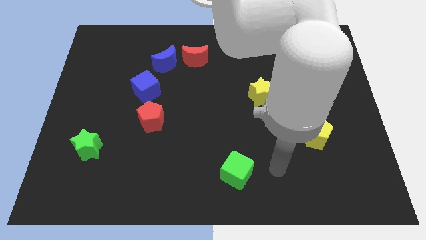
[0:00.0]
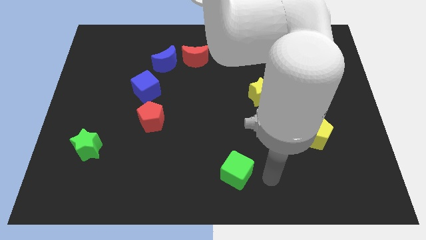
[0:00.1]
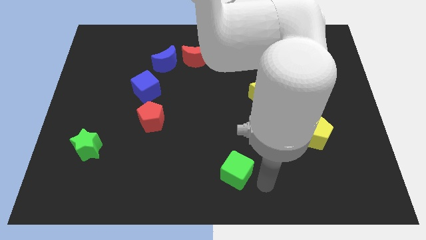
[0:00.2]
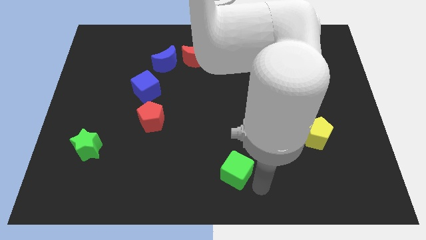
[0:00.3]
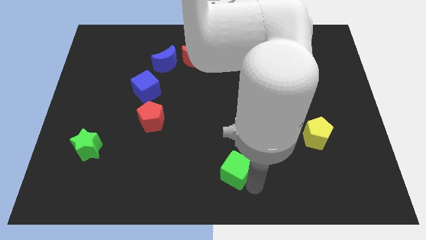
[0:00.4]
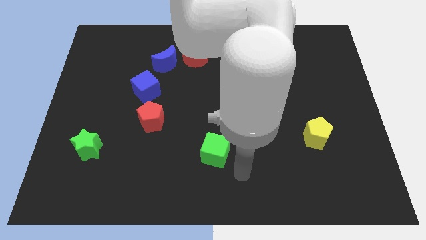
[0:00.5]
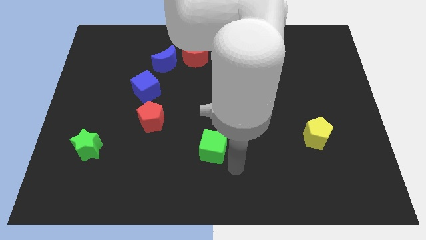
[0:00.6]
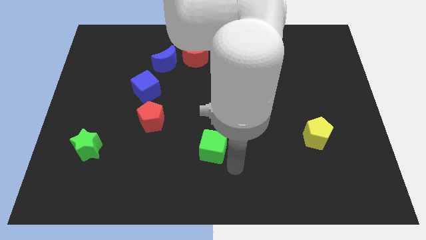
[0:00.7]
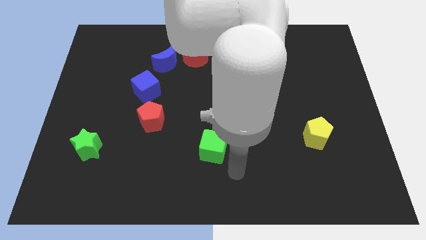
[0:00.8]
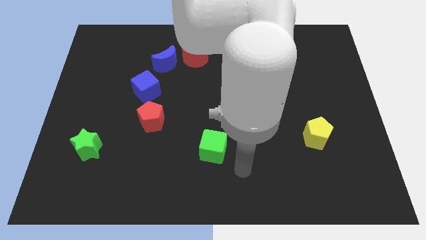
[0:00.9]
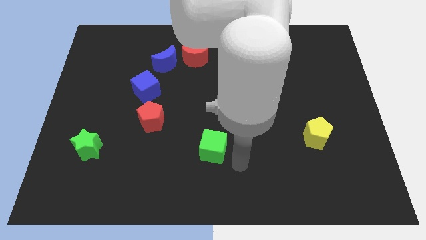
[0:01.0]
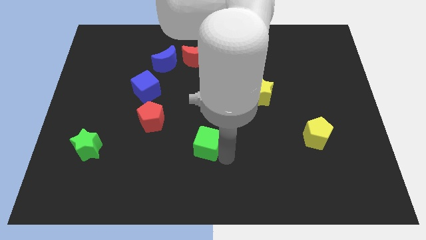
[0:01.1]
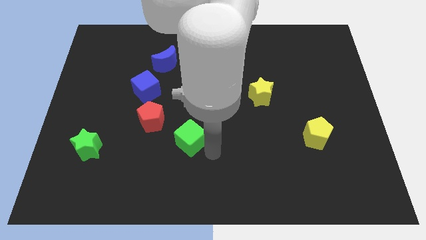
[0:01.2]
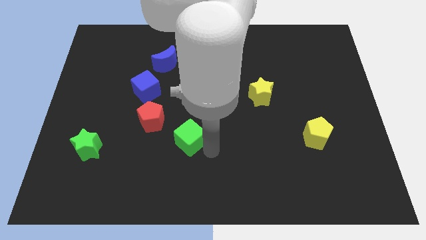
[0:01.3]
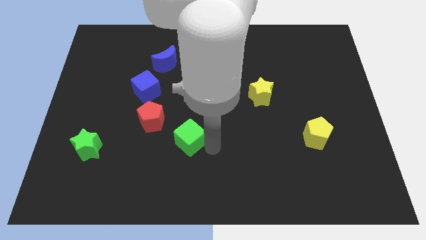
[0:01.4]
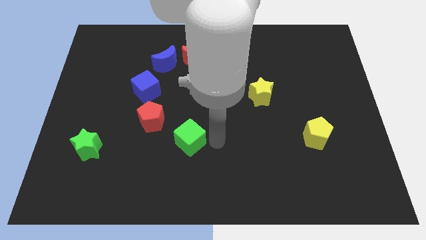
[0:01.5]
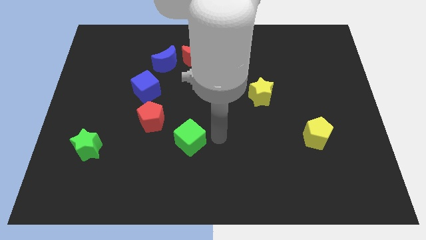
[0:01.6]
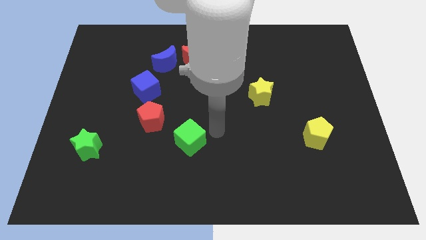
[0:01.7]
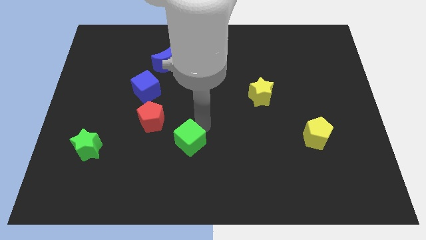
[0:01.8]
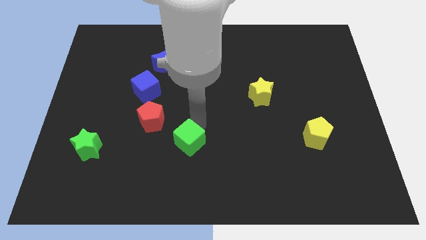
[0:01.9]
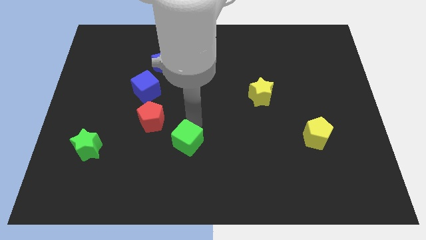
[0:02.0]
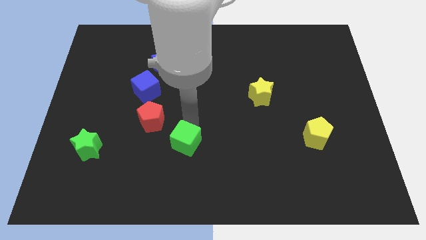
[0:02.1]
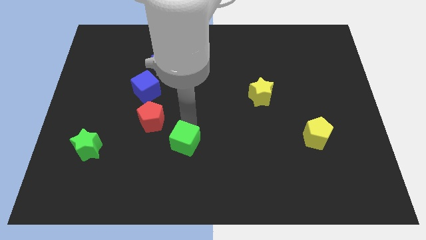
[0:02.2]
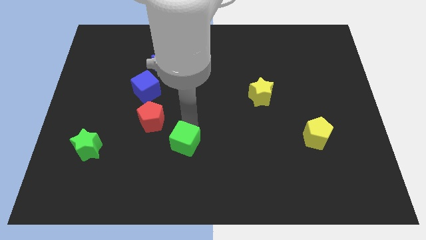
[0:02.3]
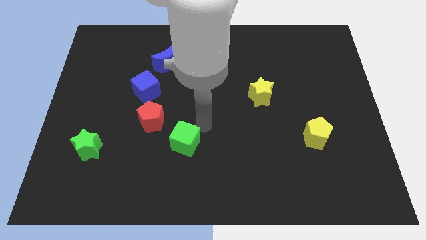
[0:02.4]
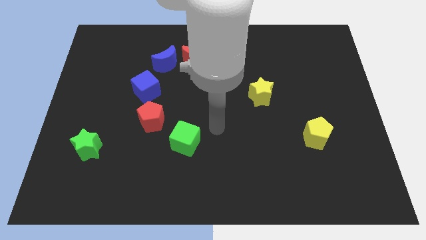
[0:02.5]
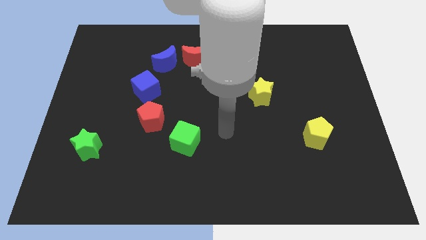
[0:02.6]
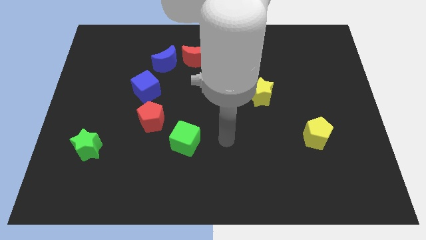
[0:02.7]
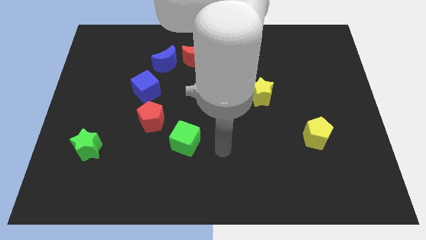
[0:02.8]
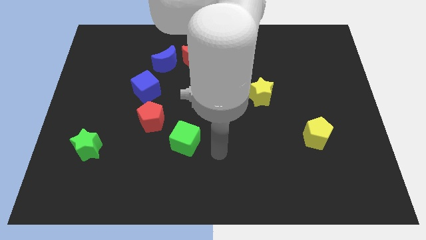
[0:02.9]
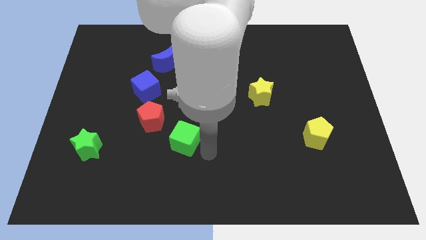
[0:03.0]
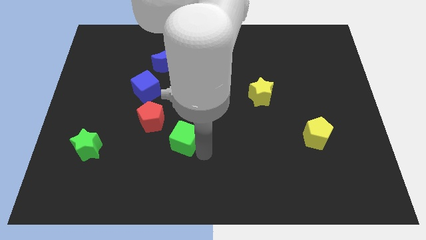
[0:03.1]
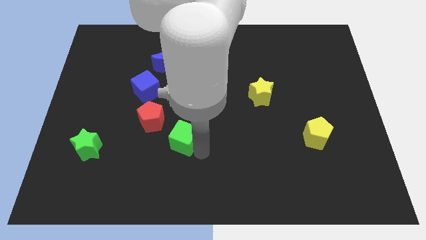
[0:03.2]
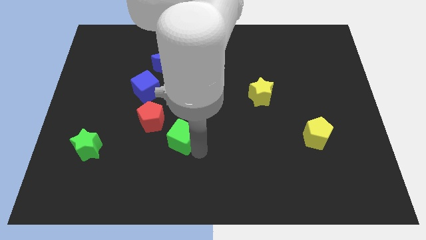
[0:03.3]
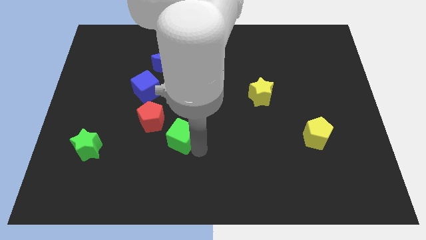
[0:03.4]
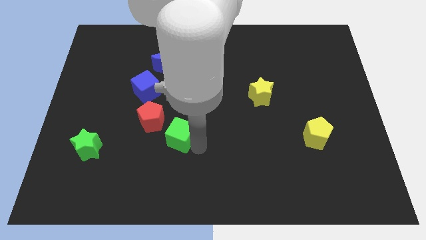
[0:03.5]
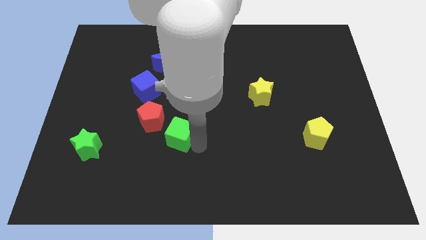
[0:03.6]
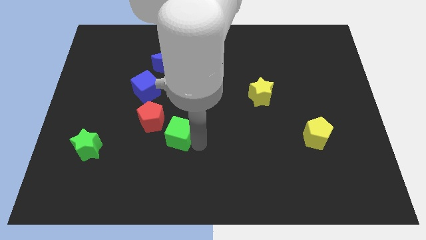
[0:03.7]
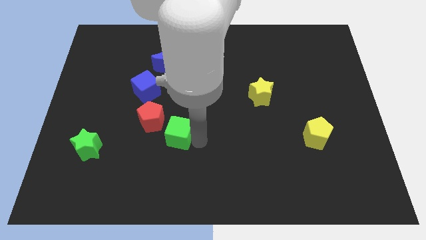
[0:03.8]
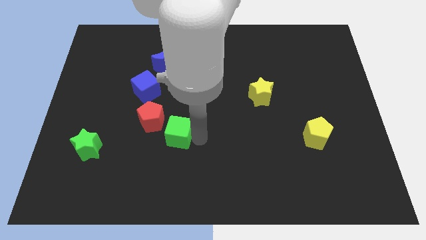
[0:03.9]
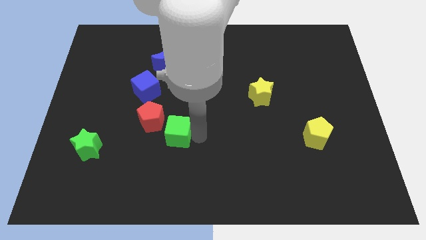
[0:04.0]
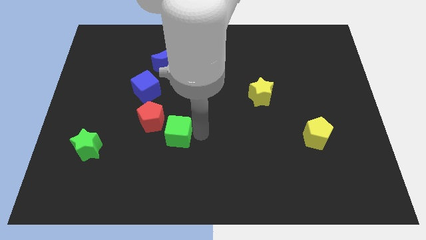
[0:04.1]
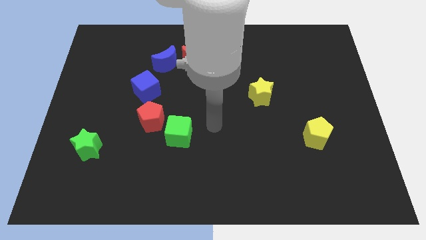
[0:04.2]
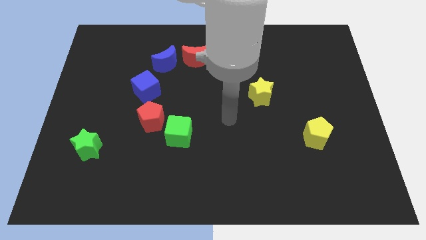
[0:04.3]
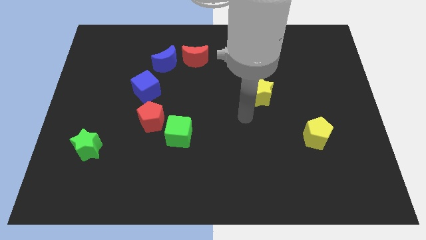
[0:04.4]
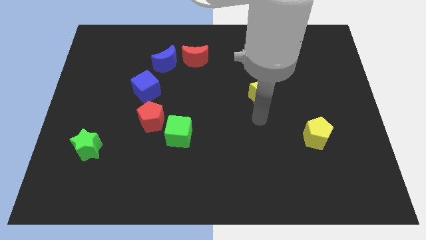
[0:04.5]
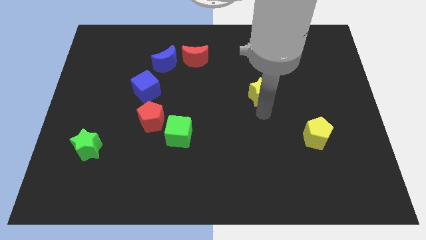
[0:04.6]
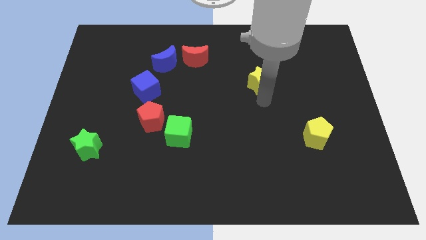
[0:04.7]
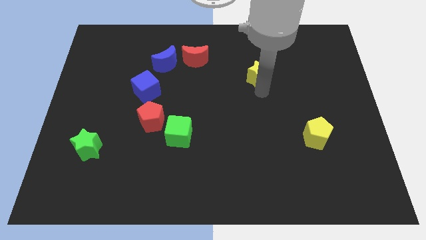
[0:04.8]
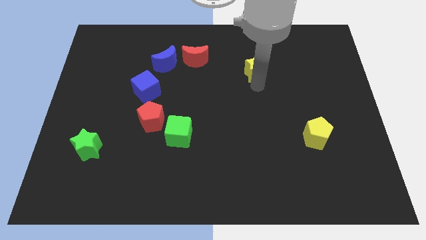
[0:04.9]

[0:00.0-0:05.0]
move the green cube close to the red pentagon

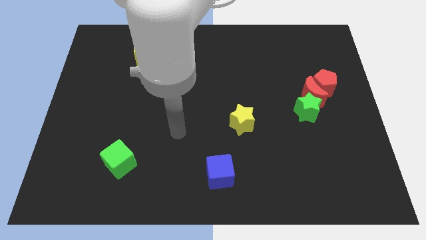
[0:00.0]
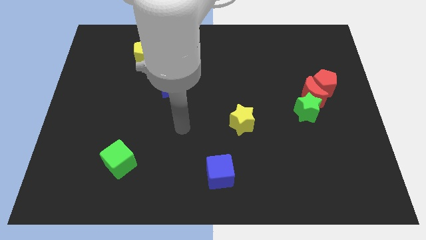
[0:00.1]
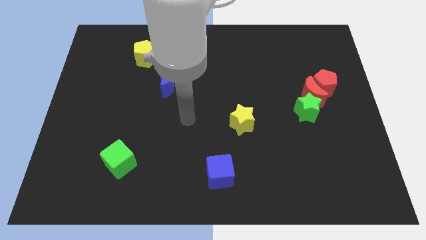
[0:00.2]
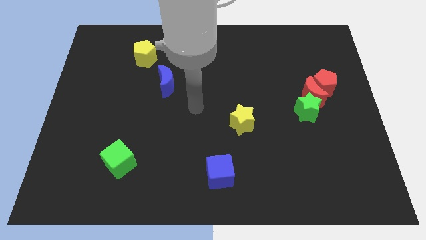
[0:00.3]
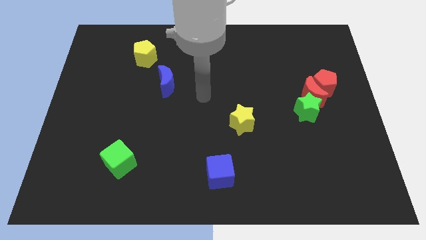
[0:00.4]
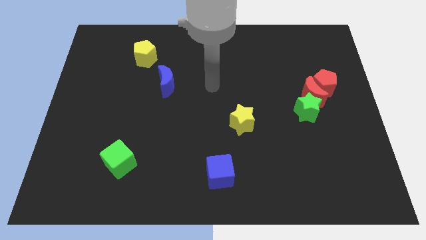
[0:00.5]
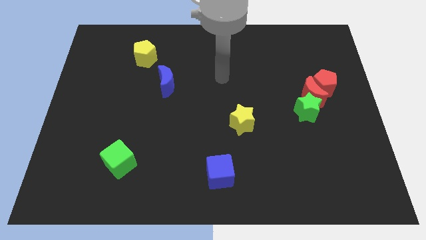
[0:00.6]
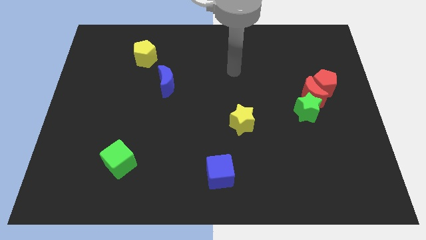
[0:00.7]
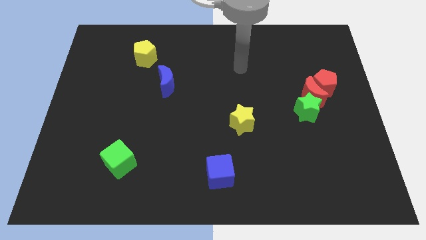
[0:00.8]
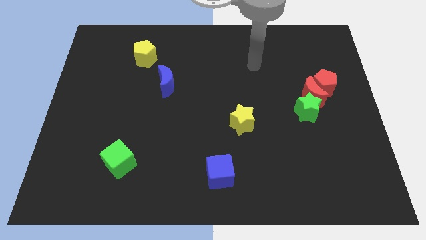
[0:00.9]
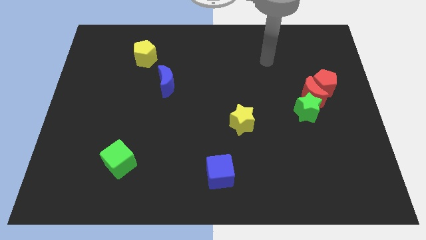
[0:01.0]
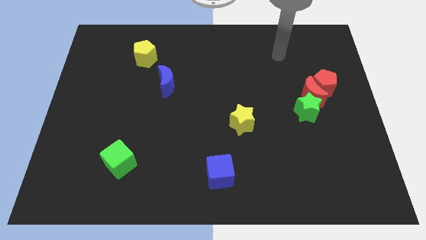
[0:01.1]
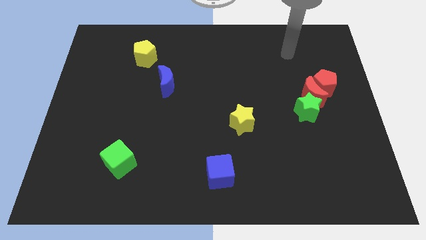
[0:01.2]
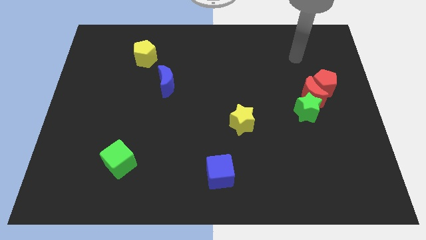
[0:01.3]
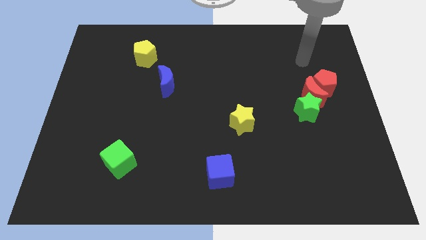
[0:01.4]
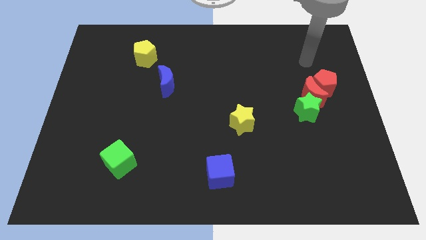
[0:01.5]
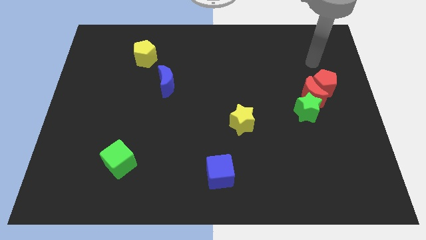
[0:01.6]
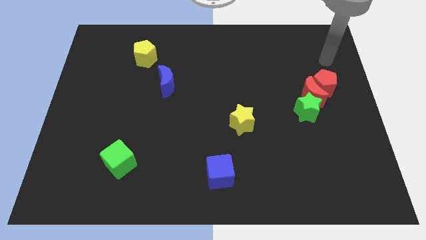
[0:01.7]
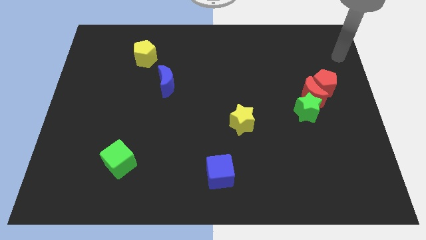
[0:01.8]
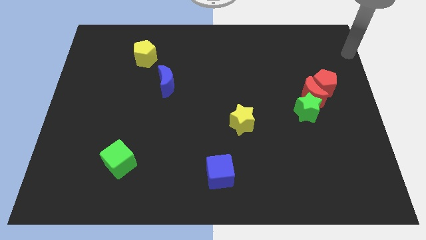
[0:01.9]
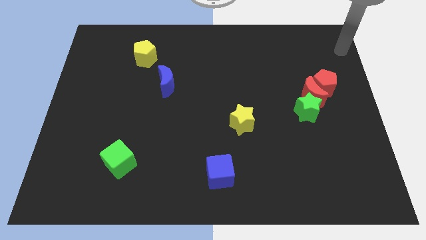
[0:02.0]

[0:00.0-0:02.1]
move the arm towards the red pentagon

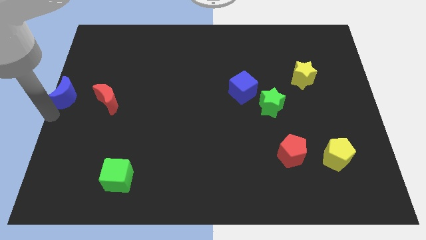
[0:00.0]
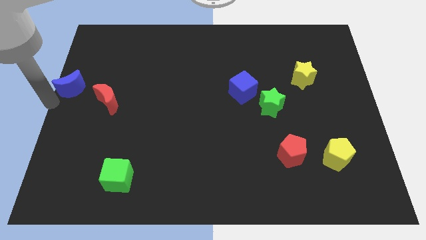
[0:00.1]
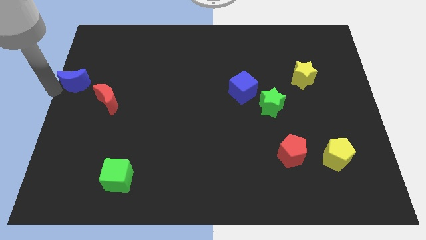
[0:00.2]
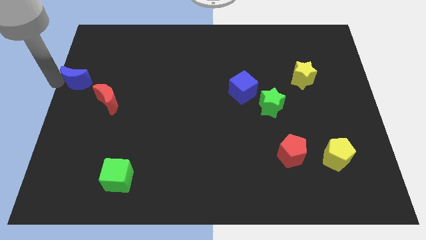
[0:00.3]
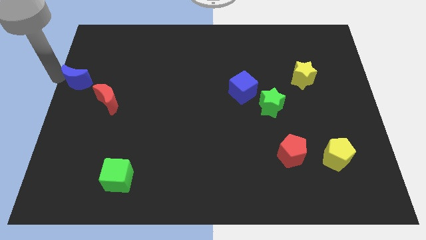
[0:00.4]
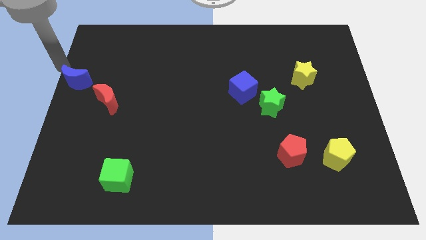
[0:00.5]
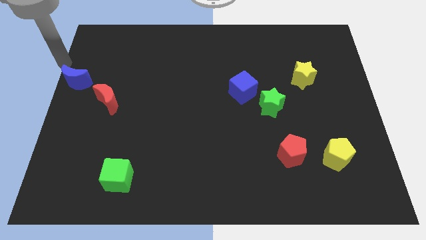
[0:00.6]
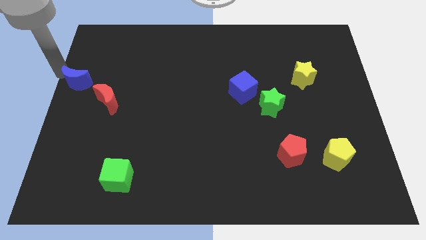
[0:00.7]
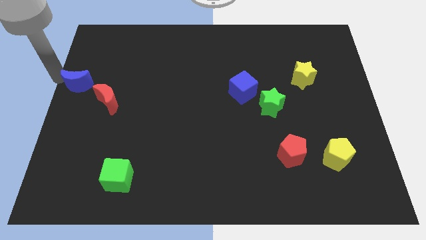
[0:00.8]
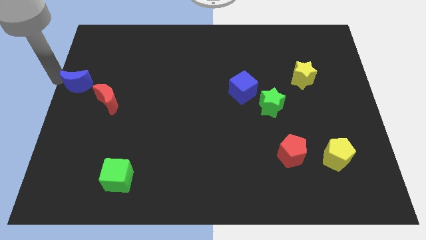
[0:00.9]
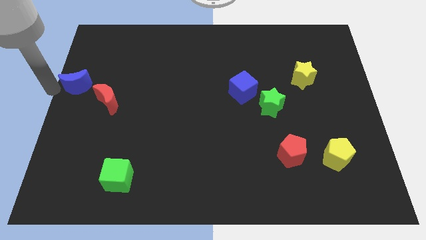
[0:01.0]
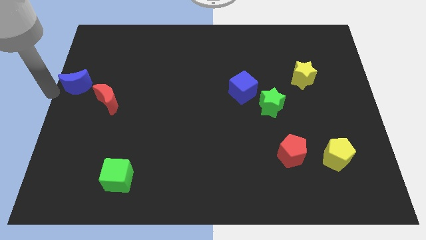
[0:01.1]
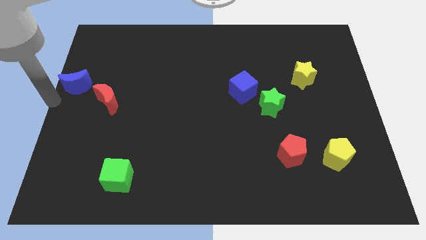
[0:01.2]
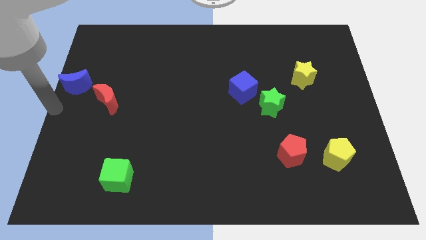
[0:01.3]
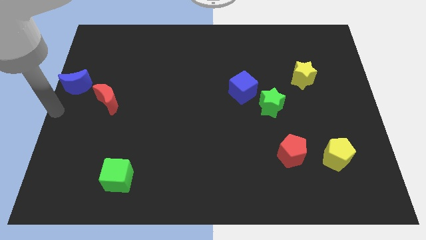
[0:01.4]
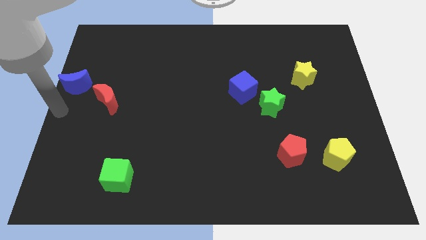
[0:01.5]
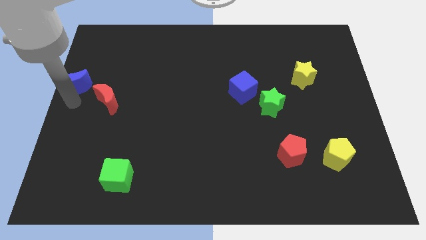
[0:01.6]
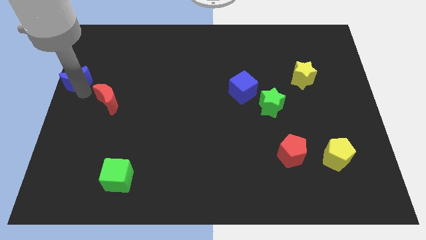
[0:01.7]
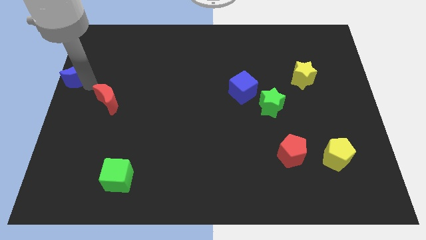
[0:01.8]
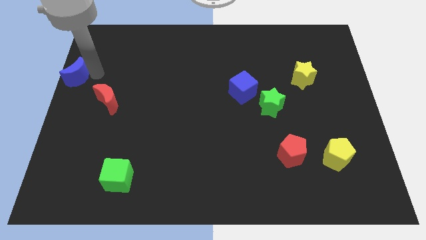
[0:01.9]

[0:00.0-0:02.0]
slide the blue moon diagonally top left to the red moon

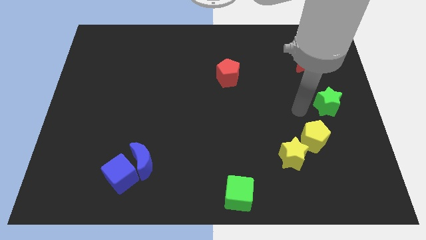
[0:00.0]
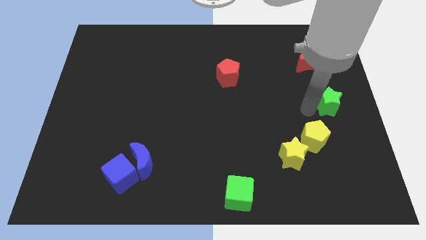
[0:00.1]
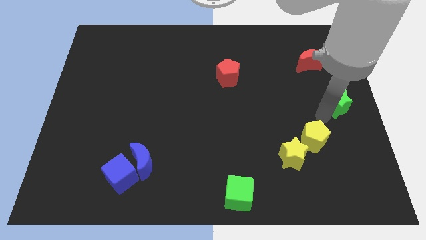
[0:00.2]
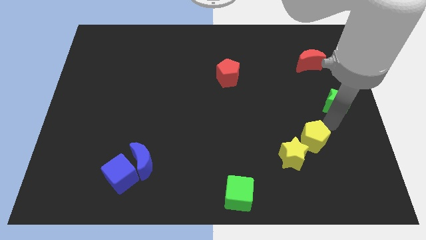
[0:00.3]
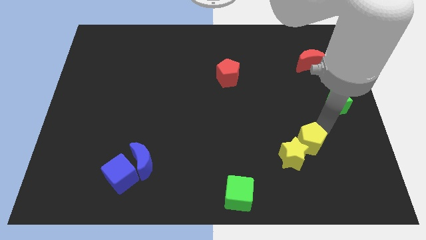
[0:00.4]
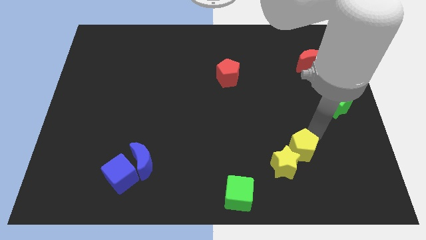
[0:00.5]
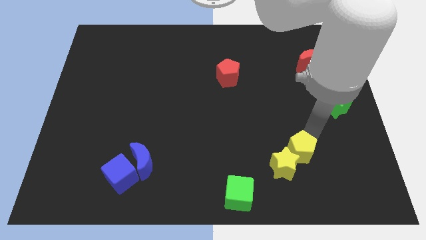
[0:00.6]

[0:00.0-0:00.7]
move yellow pentagon towards yellow star
